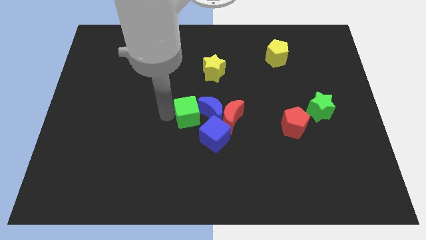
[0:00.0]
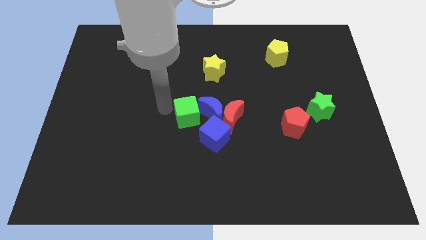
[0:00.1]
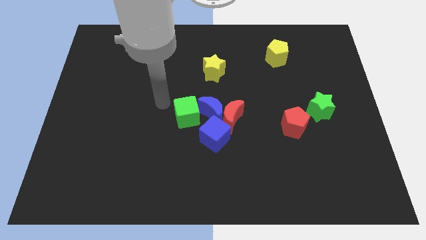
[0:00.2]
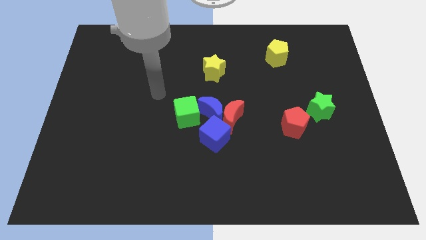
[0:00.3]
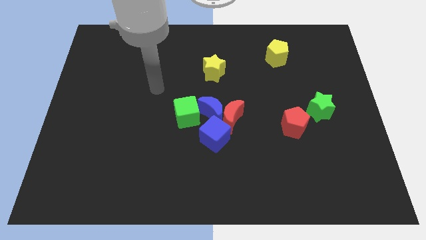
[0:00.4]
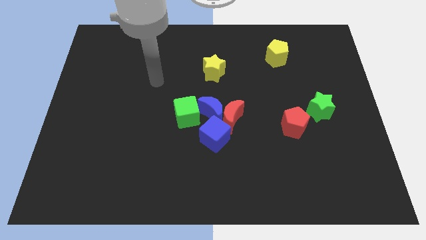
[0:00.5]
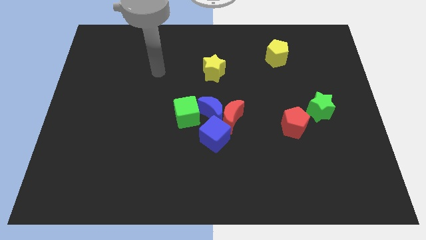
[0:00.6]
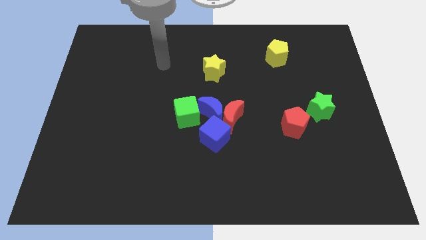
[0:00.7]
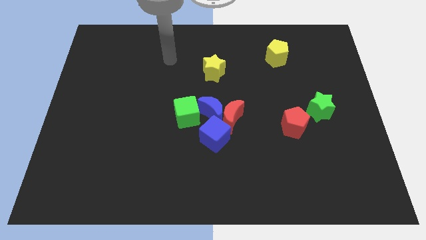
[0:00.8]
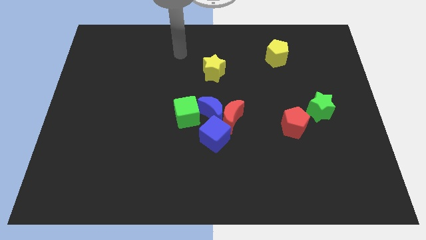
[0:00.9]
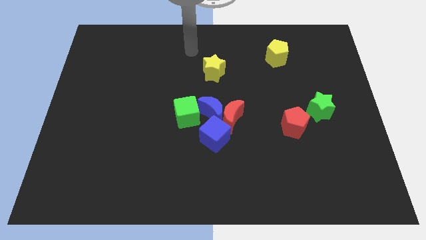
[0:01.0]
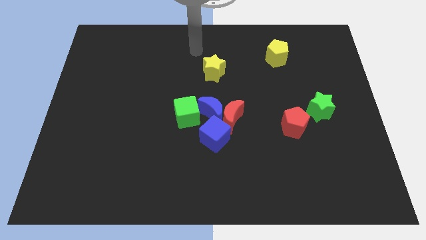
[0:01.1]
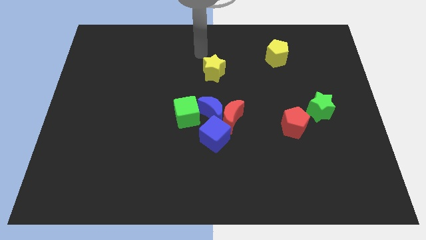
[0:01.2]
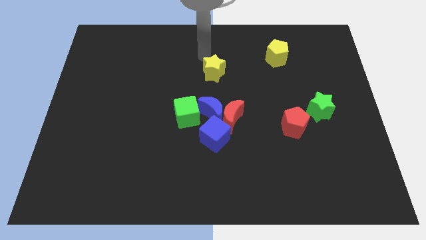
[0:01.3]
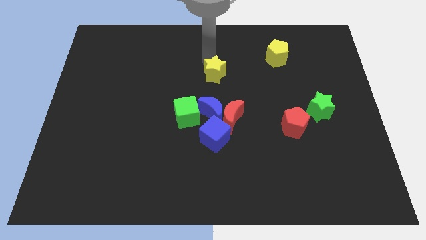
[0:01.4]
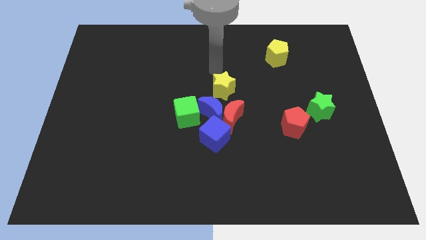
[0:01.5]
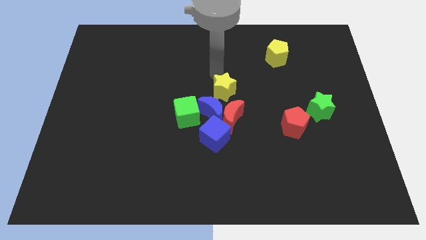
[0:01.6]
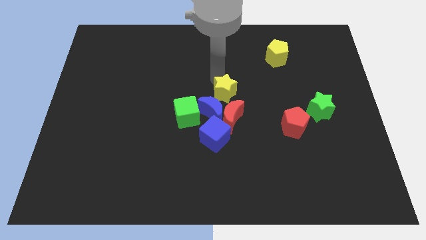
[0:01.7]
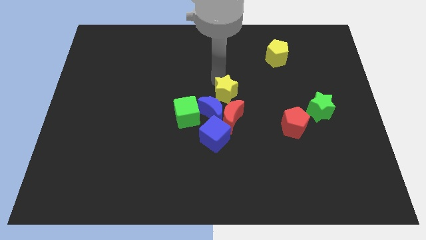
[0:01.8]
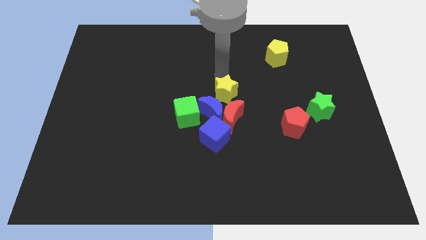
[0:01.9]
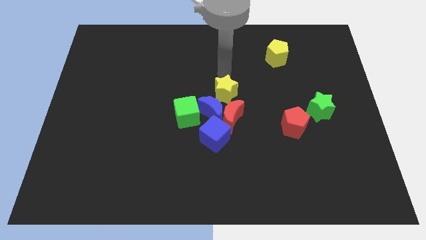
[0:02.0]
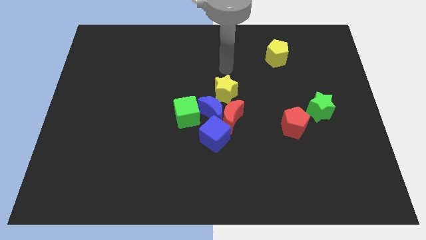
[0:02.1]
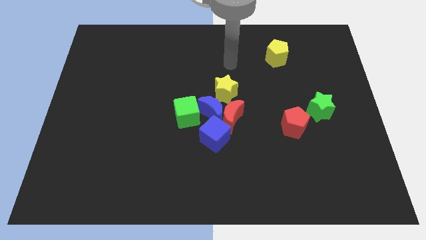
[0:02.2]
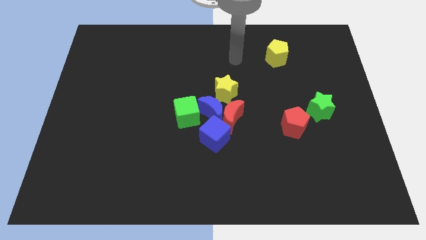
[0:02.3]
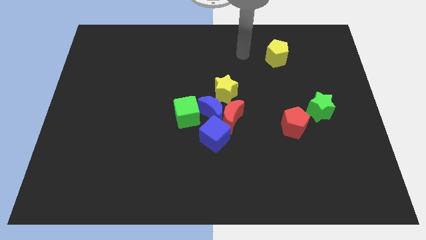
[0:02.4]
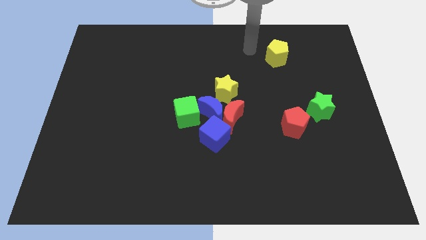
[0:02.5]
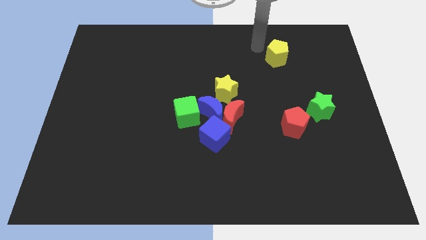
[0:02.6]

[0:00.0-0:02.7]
move the yellow star to the group of blocks

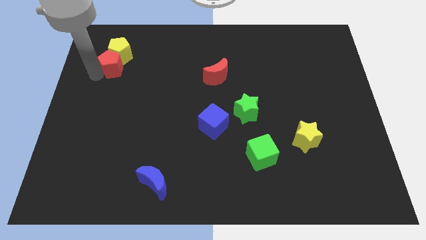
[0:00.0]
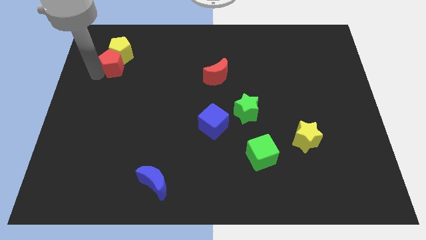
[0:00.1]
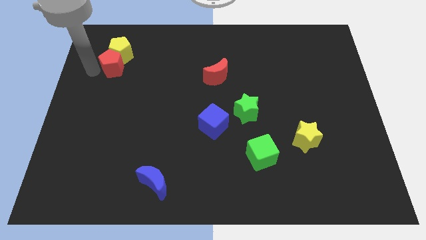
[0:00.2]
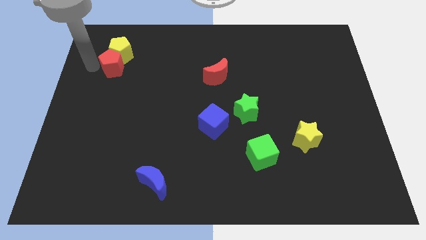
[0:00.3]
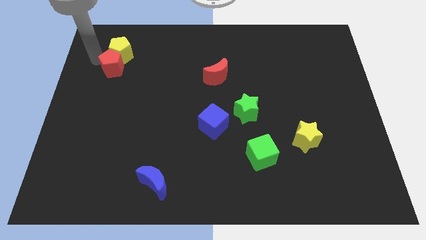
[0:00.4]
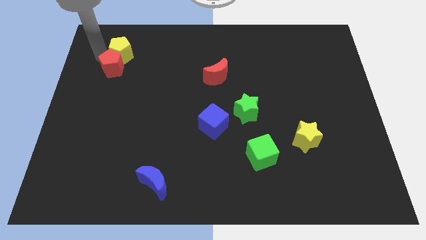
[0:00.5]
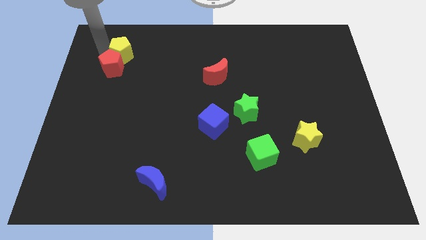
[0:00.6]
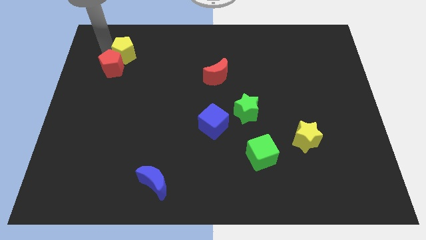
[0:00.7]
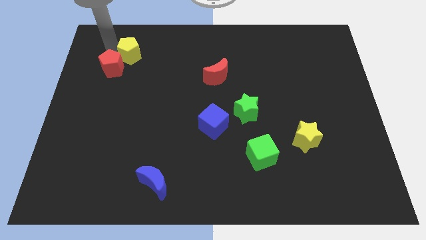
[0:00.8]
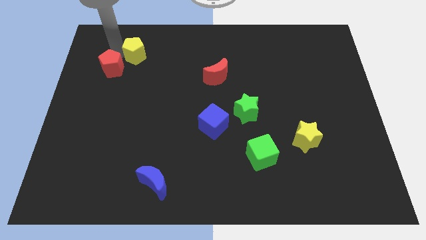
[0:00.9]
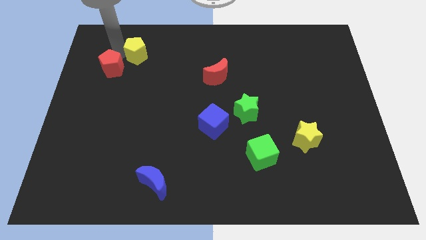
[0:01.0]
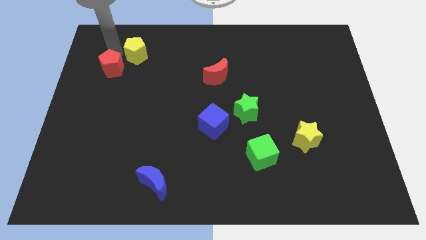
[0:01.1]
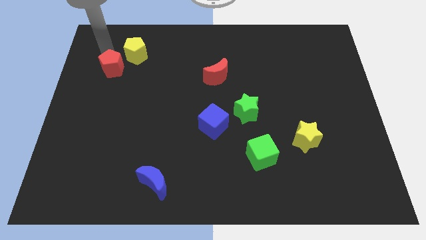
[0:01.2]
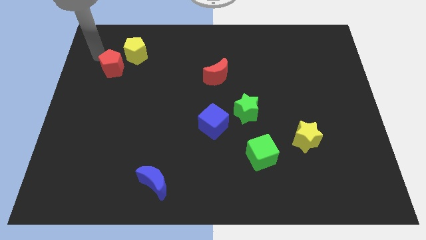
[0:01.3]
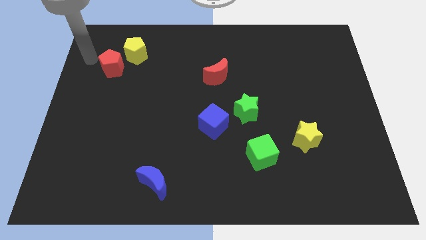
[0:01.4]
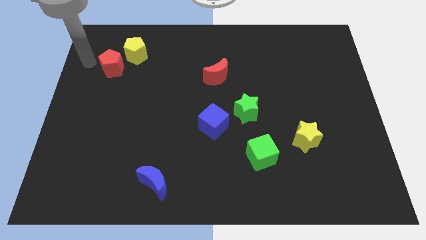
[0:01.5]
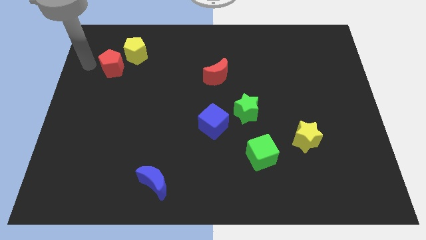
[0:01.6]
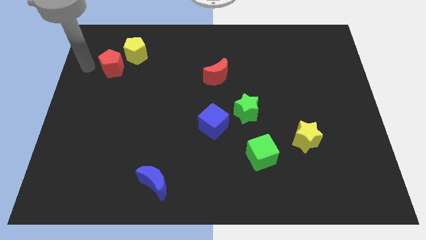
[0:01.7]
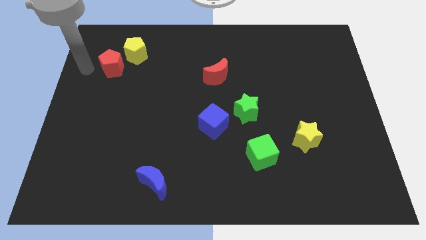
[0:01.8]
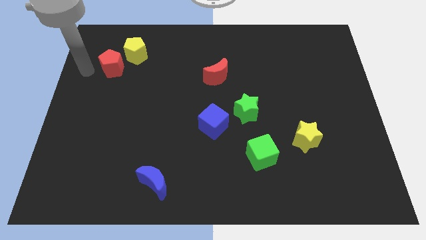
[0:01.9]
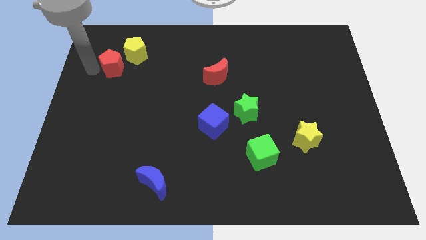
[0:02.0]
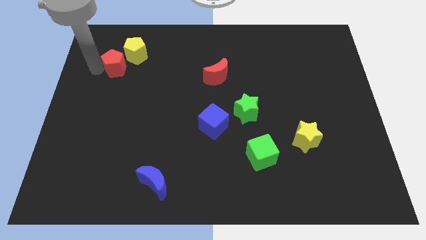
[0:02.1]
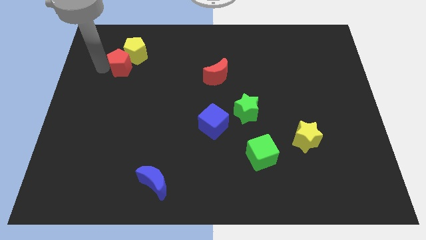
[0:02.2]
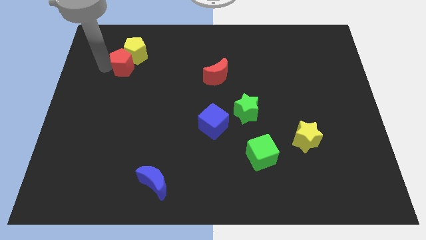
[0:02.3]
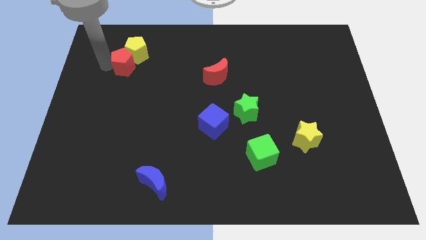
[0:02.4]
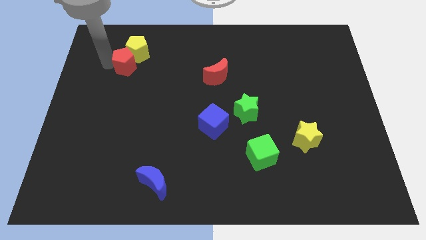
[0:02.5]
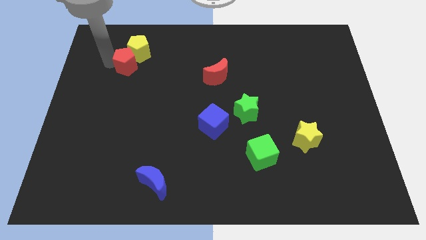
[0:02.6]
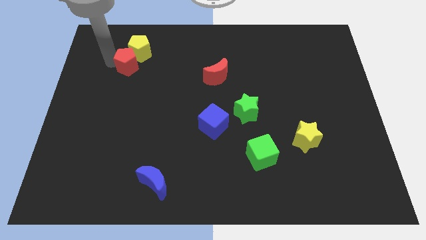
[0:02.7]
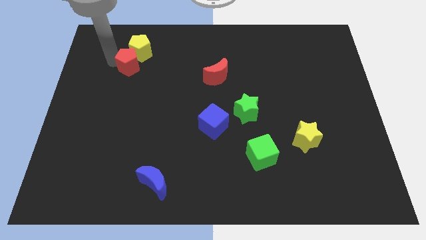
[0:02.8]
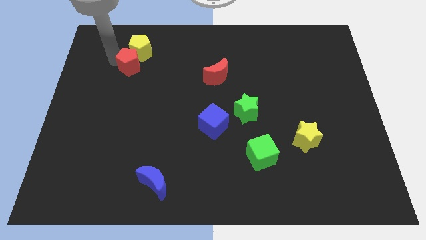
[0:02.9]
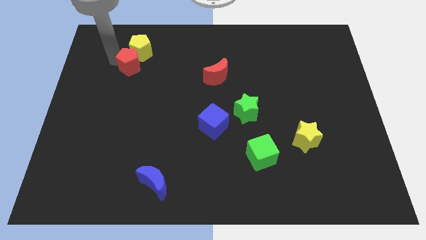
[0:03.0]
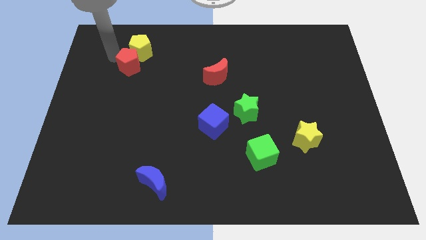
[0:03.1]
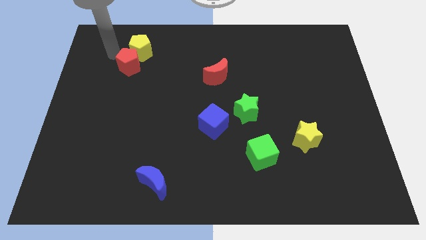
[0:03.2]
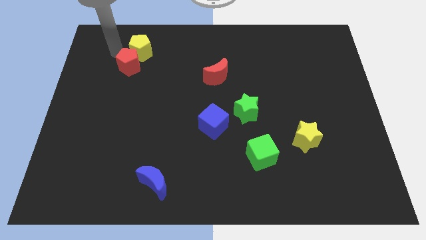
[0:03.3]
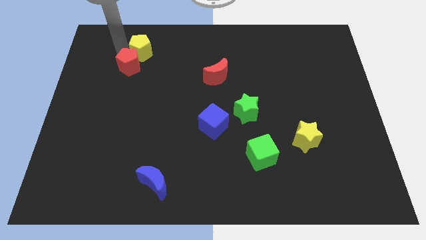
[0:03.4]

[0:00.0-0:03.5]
push the red pentagon into yellow pentagon

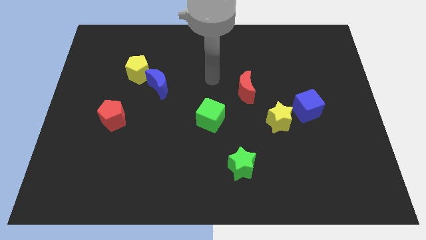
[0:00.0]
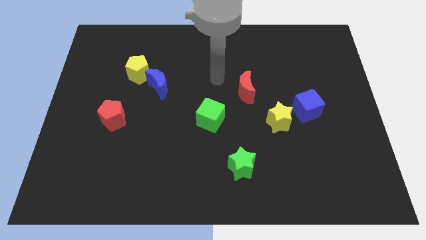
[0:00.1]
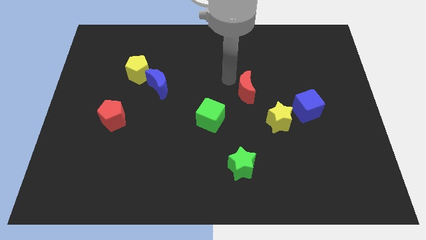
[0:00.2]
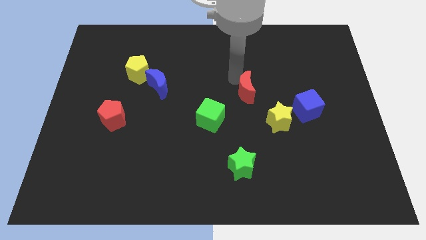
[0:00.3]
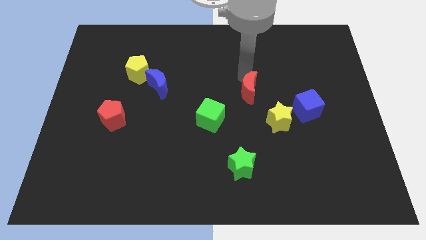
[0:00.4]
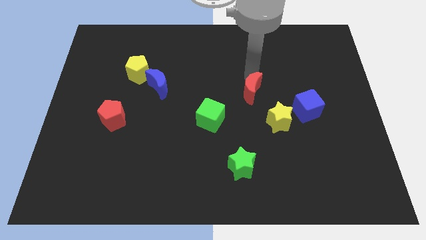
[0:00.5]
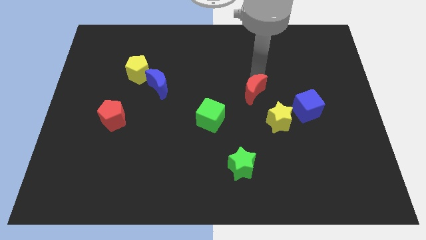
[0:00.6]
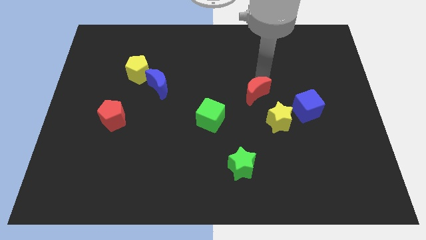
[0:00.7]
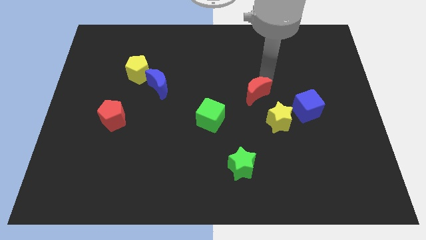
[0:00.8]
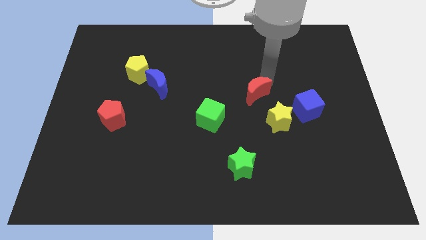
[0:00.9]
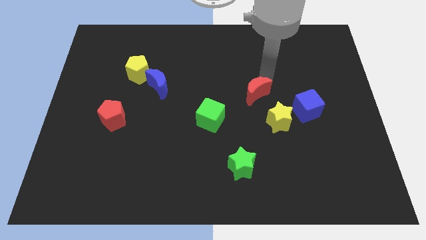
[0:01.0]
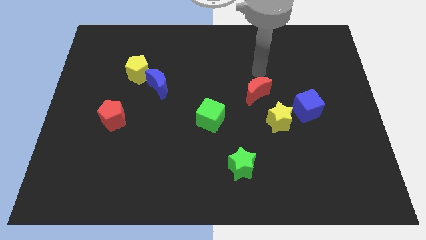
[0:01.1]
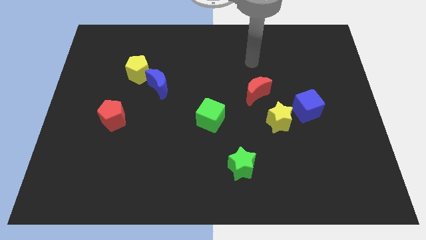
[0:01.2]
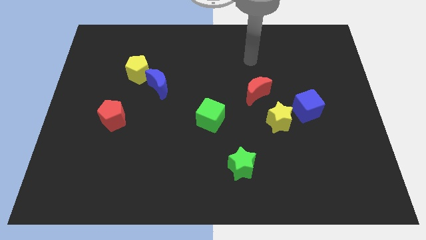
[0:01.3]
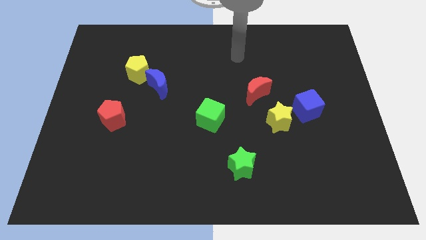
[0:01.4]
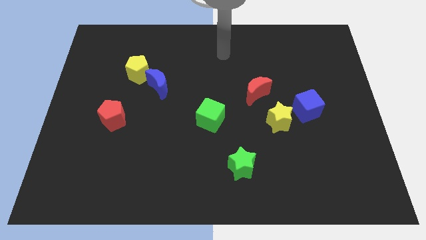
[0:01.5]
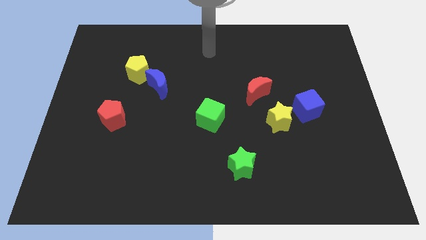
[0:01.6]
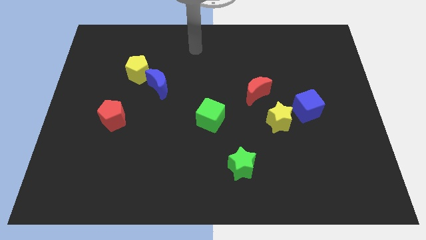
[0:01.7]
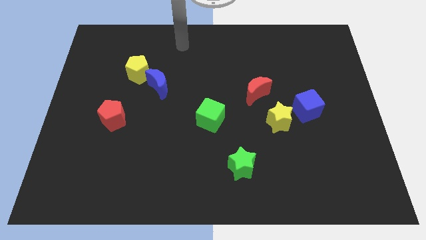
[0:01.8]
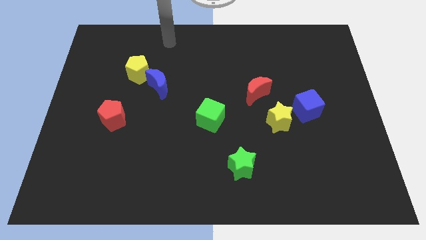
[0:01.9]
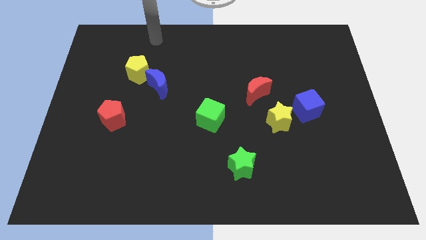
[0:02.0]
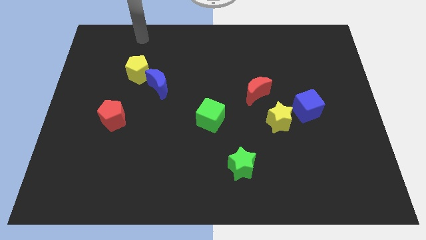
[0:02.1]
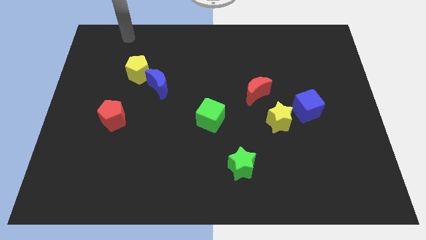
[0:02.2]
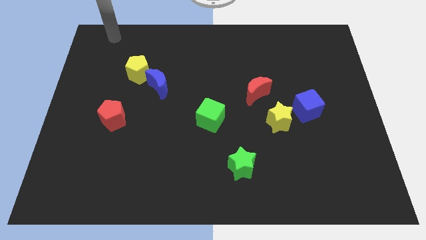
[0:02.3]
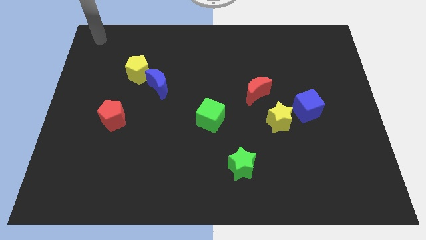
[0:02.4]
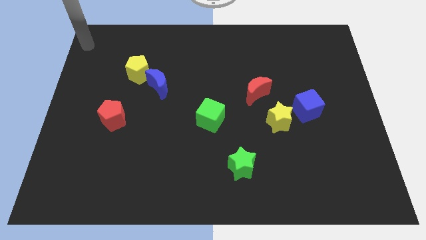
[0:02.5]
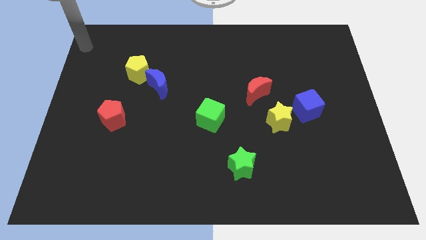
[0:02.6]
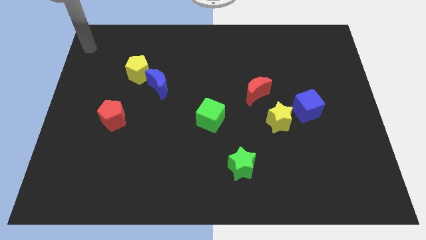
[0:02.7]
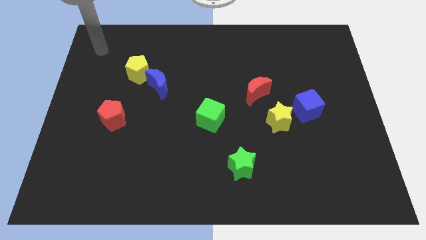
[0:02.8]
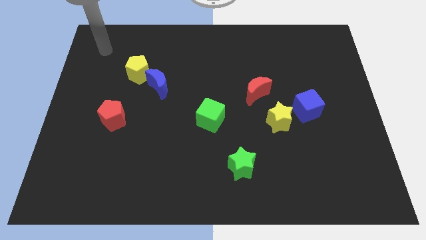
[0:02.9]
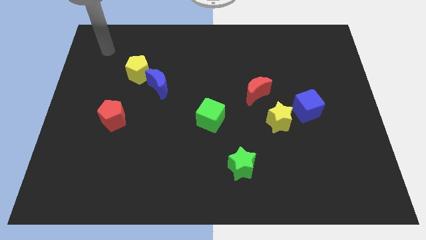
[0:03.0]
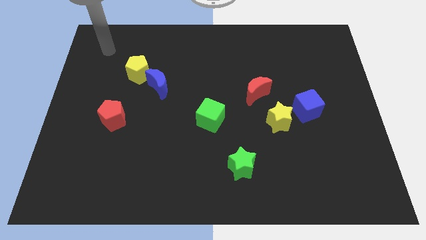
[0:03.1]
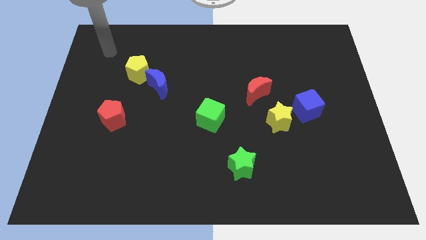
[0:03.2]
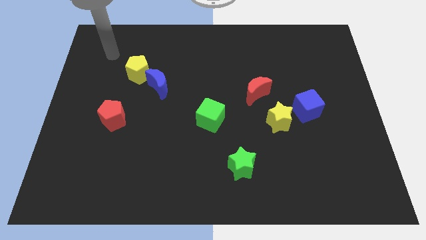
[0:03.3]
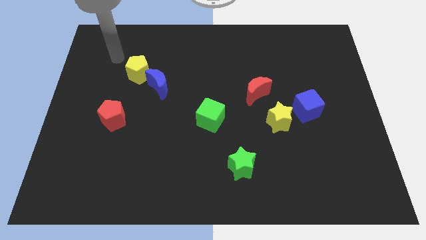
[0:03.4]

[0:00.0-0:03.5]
place the red moon above the yellow star
